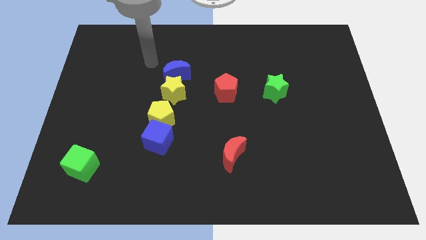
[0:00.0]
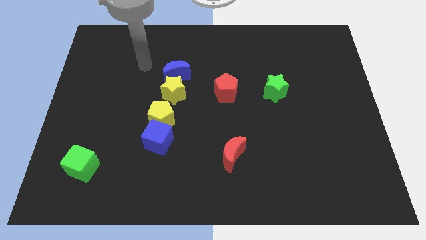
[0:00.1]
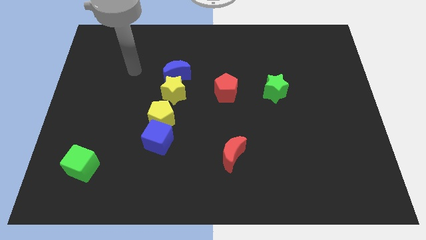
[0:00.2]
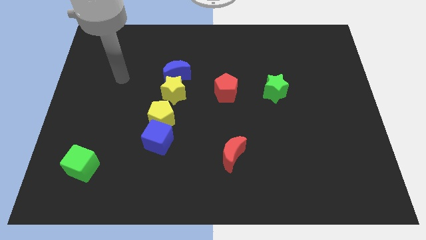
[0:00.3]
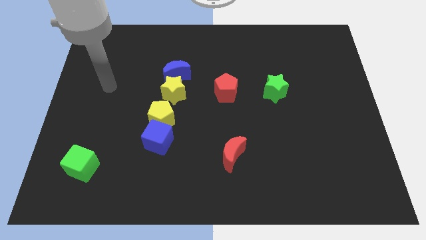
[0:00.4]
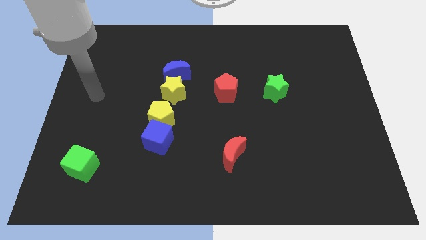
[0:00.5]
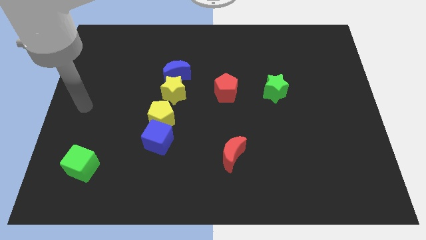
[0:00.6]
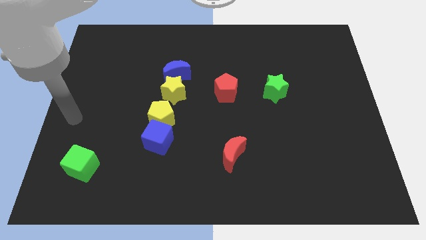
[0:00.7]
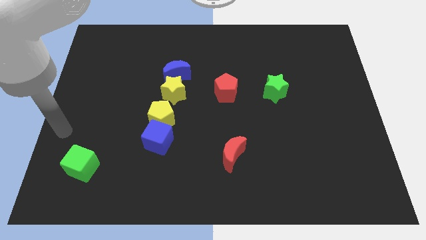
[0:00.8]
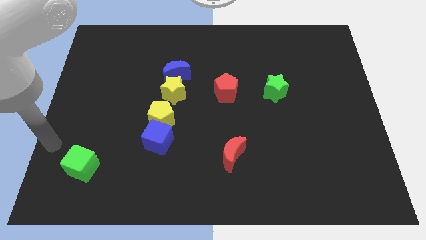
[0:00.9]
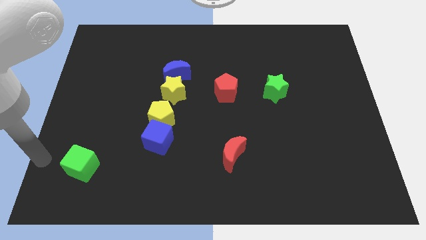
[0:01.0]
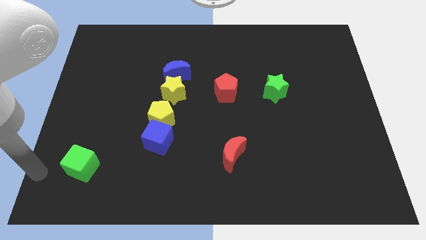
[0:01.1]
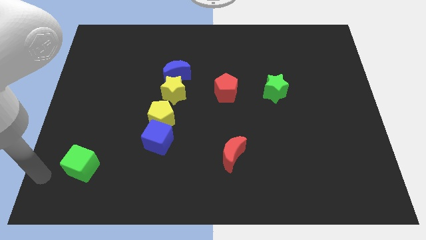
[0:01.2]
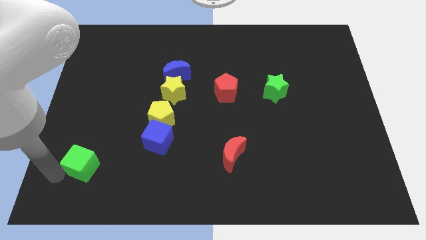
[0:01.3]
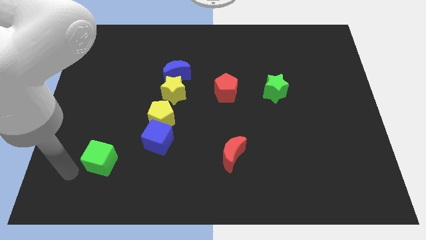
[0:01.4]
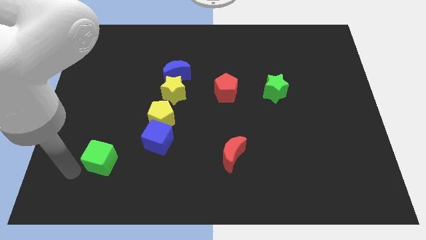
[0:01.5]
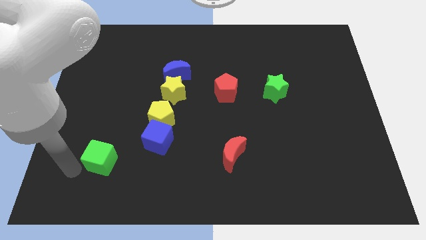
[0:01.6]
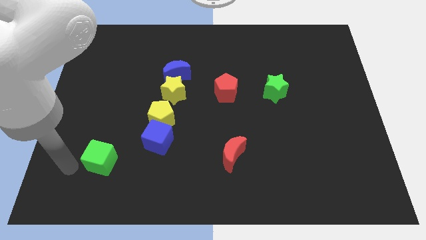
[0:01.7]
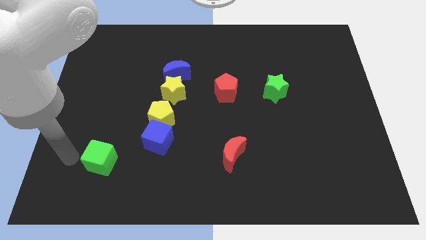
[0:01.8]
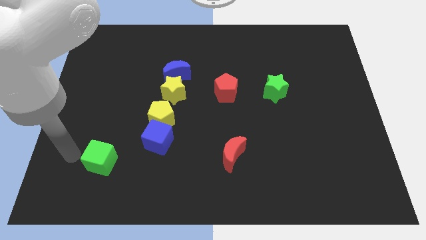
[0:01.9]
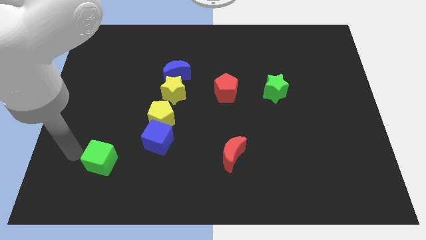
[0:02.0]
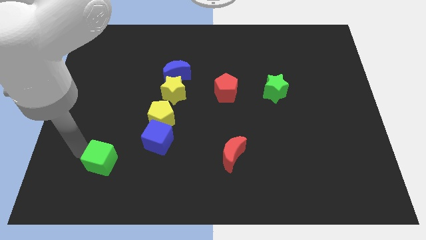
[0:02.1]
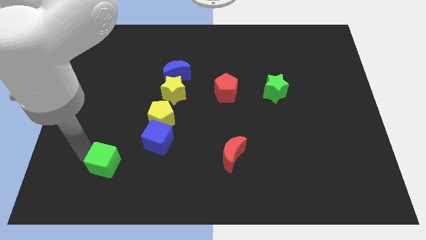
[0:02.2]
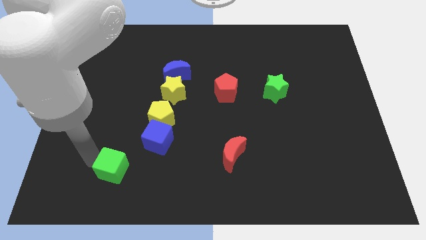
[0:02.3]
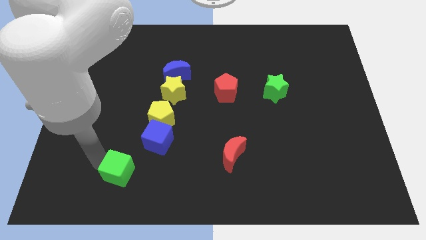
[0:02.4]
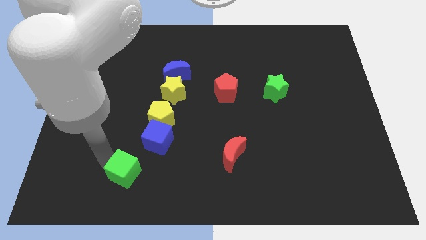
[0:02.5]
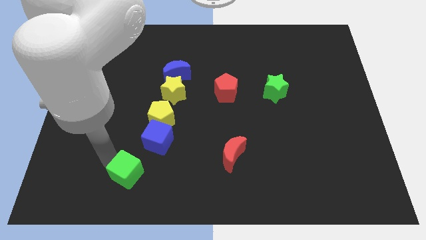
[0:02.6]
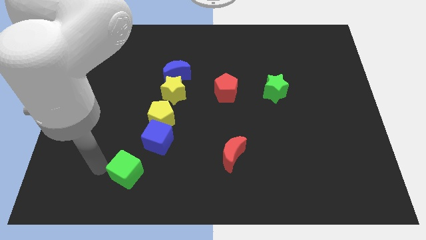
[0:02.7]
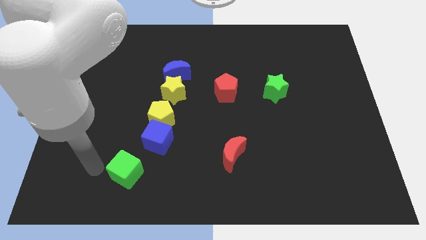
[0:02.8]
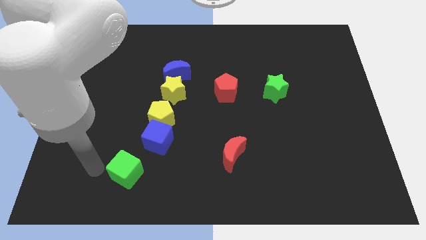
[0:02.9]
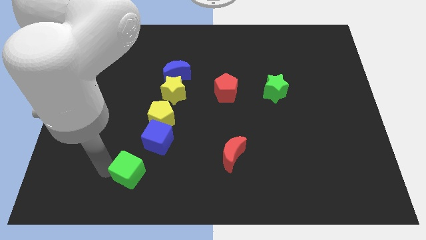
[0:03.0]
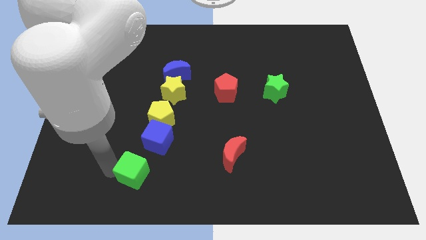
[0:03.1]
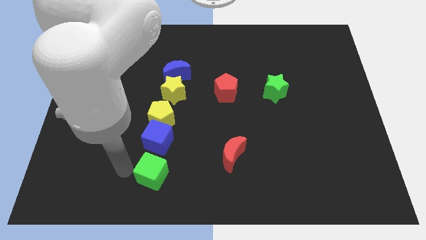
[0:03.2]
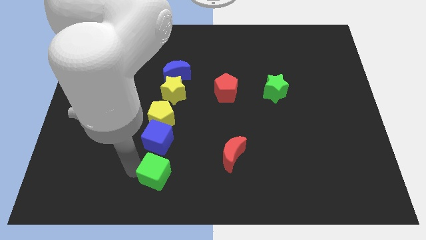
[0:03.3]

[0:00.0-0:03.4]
move green cube to the bottom of blue cube

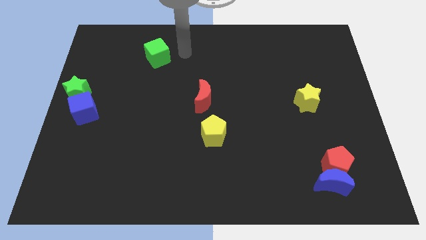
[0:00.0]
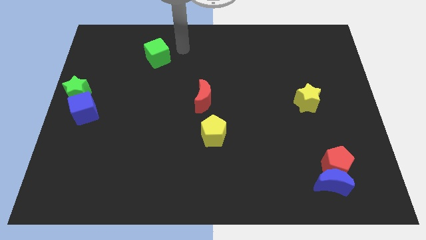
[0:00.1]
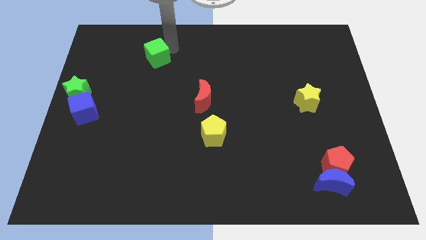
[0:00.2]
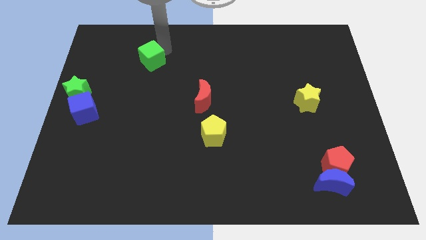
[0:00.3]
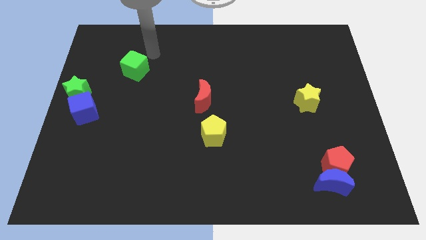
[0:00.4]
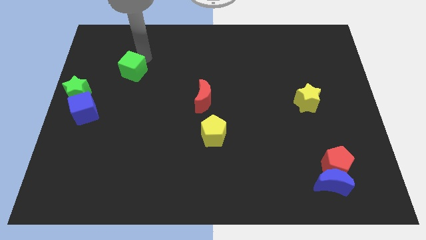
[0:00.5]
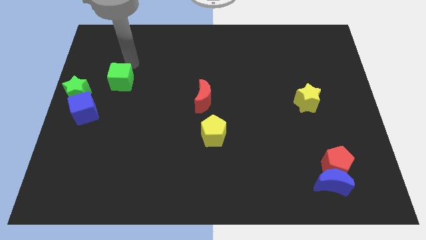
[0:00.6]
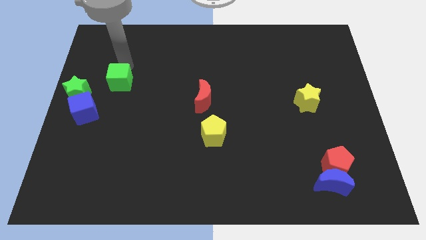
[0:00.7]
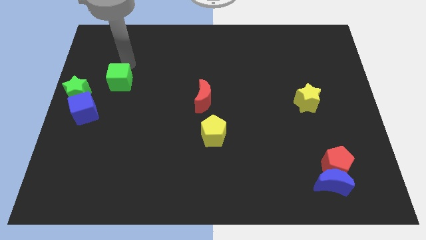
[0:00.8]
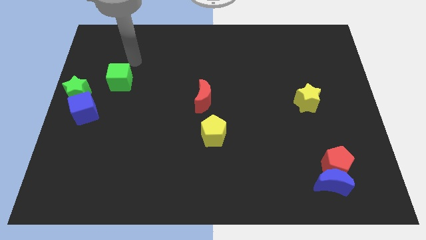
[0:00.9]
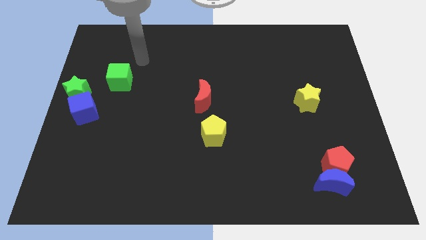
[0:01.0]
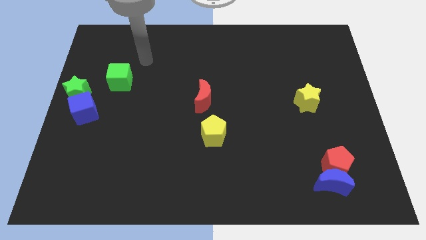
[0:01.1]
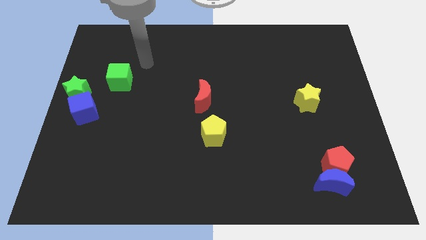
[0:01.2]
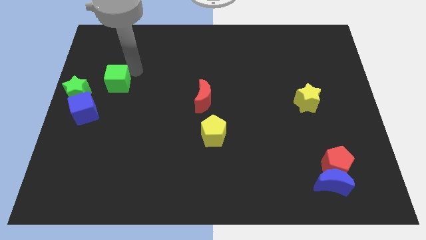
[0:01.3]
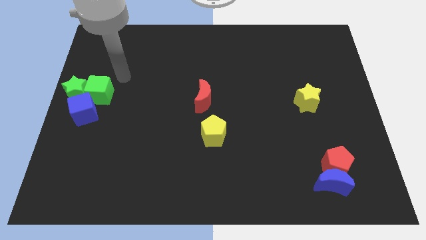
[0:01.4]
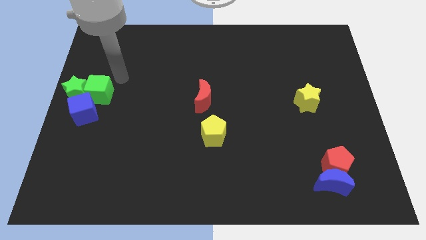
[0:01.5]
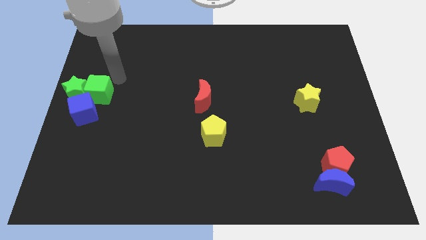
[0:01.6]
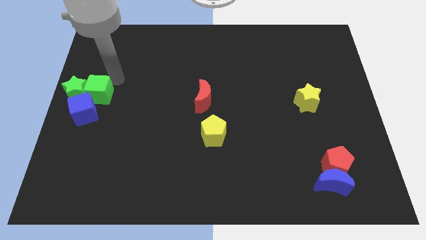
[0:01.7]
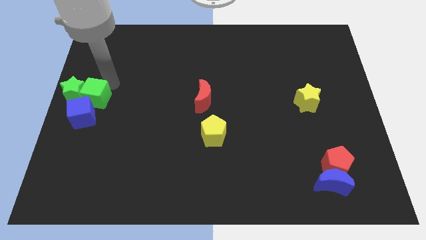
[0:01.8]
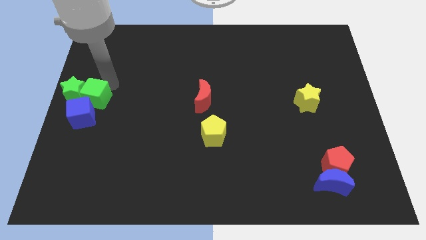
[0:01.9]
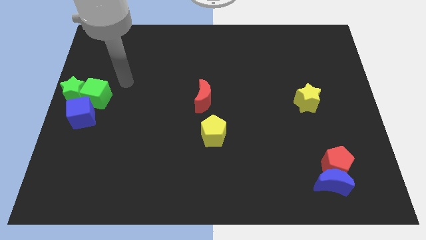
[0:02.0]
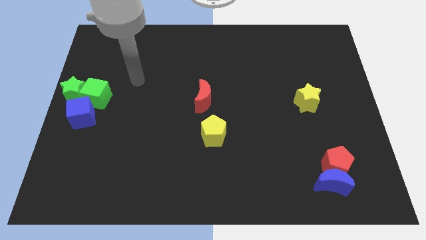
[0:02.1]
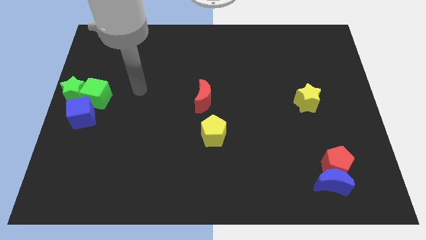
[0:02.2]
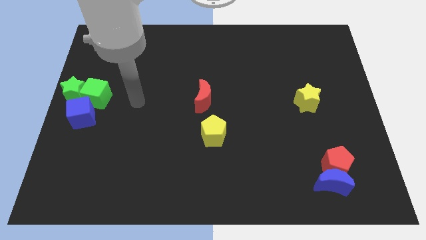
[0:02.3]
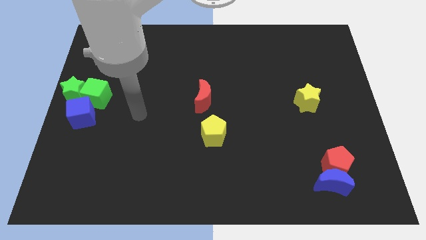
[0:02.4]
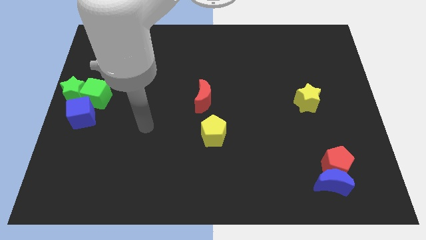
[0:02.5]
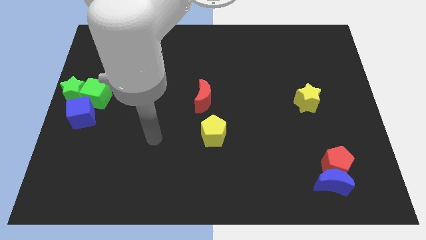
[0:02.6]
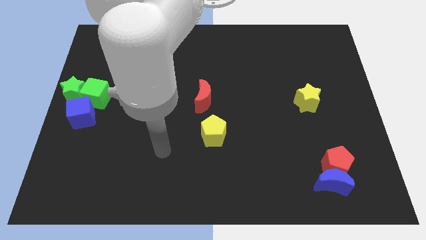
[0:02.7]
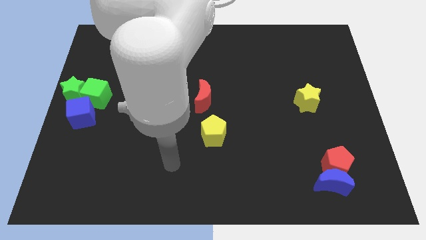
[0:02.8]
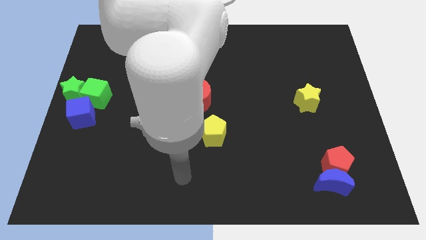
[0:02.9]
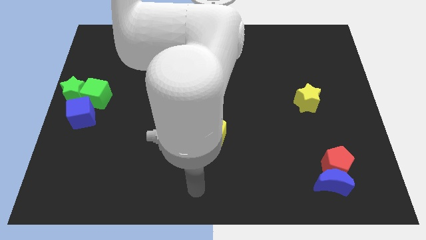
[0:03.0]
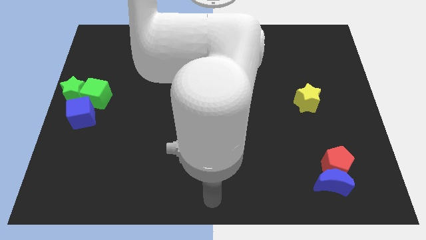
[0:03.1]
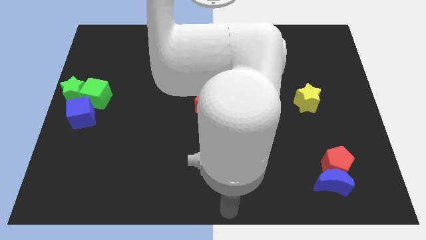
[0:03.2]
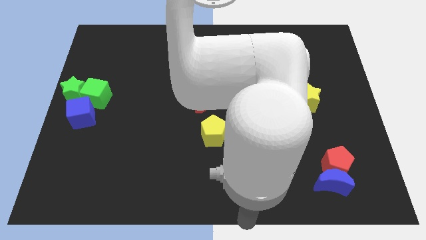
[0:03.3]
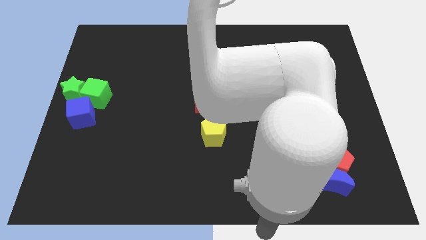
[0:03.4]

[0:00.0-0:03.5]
push the green cube into the green star

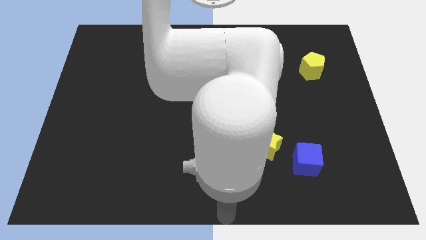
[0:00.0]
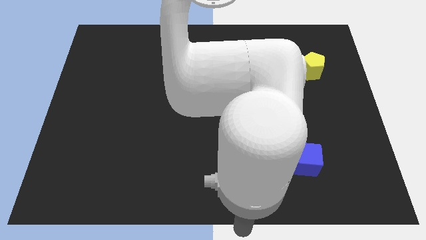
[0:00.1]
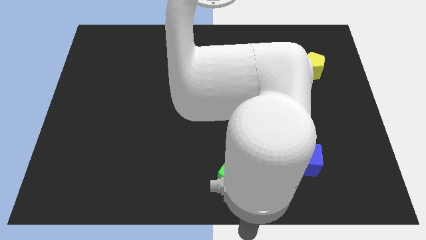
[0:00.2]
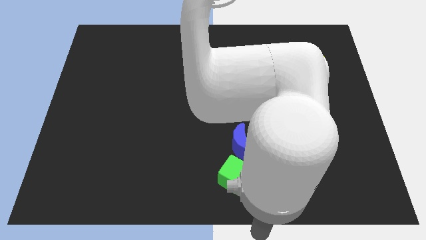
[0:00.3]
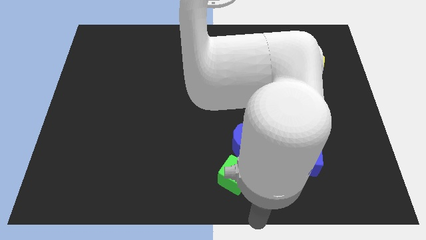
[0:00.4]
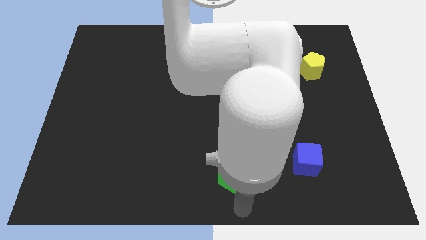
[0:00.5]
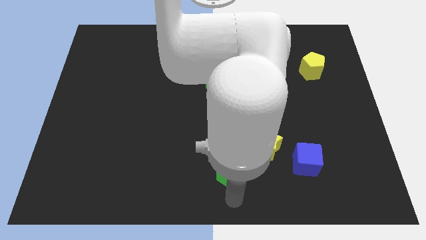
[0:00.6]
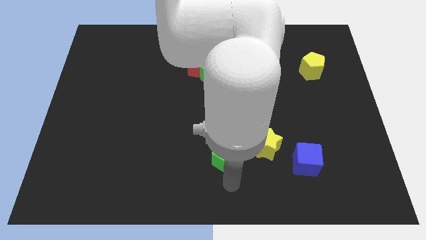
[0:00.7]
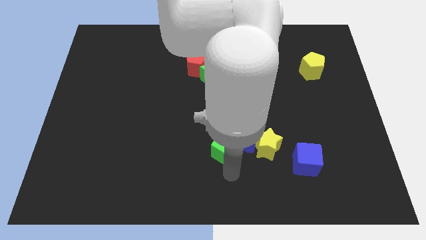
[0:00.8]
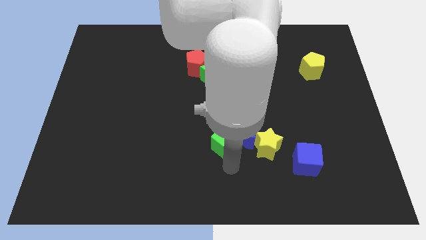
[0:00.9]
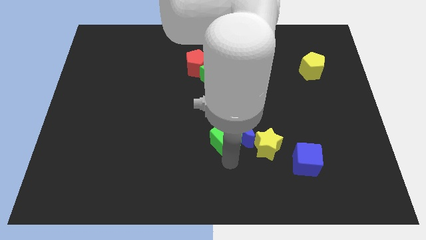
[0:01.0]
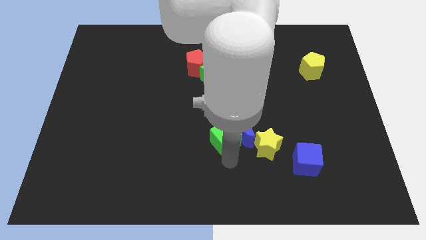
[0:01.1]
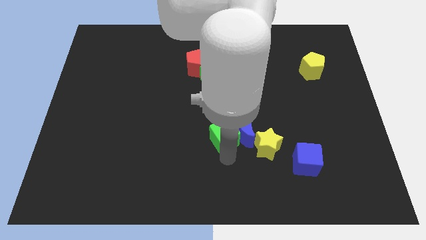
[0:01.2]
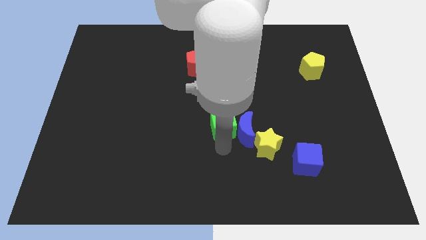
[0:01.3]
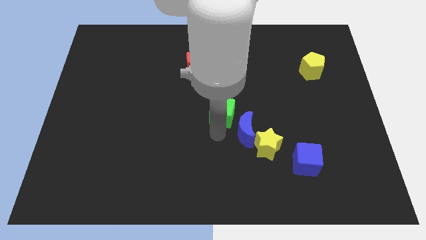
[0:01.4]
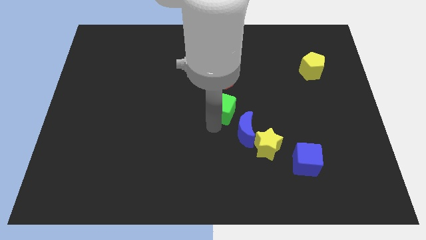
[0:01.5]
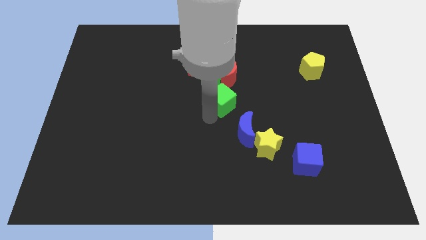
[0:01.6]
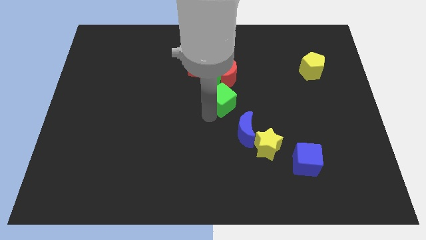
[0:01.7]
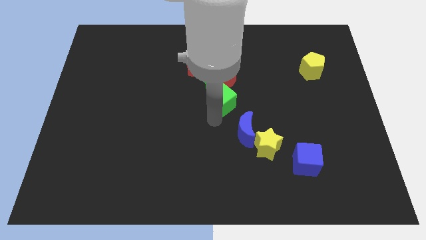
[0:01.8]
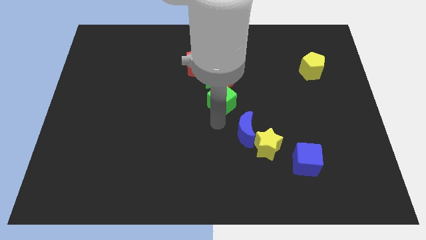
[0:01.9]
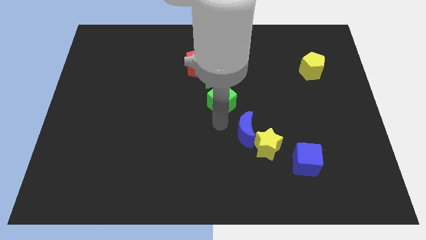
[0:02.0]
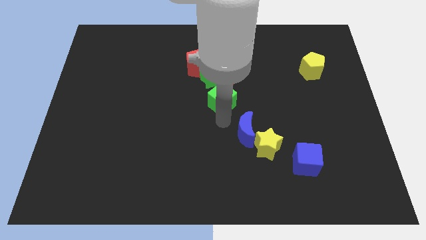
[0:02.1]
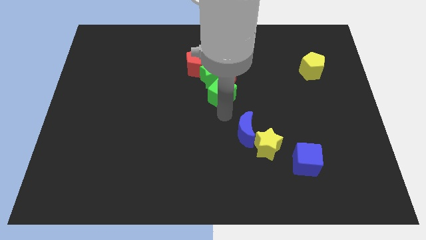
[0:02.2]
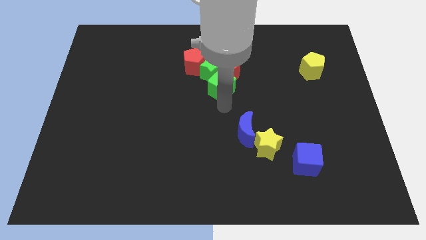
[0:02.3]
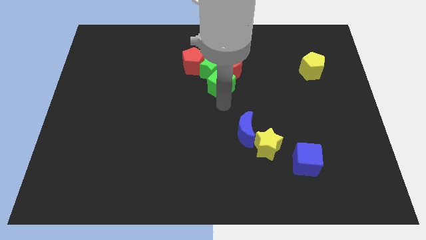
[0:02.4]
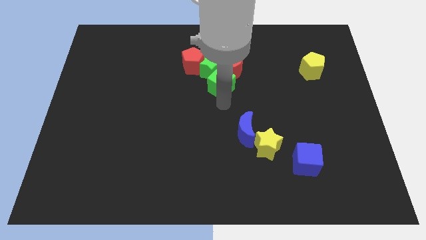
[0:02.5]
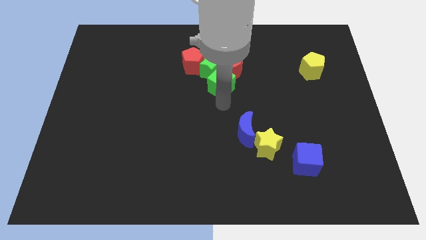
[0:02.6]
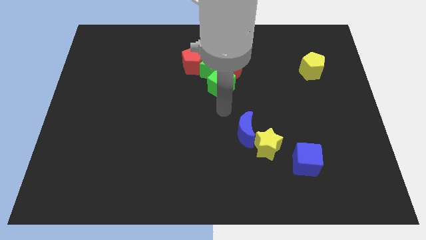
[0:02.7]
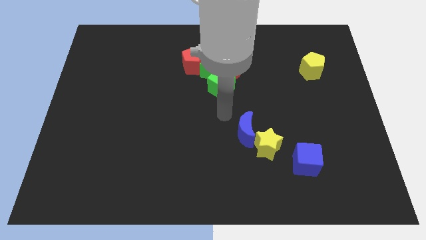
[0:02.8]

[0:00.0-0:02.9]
move the green cube to the bottom of the green star
